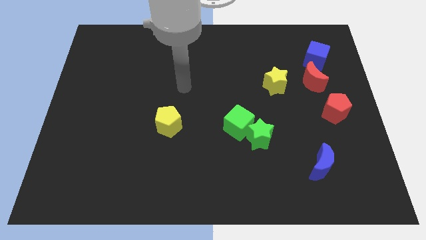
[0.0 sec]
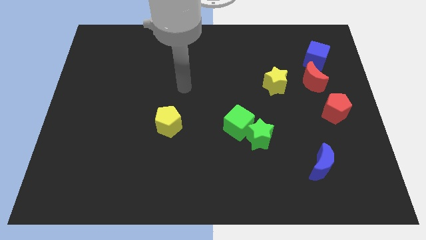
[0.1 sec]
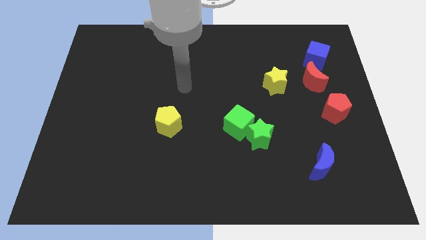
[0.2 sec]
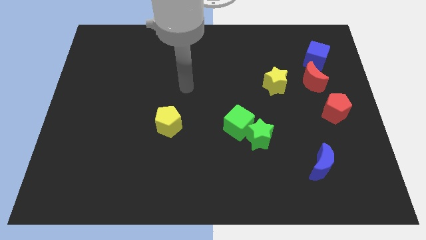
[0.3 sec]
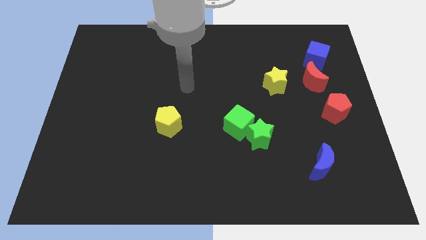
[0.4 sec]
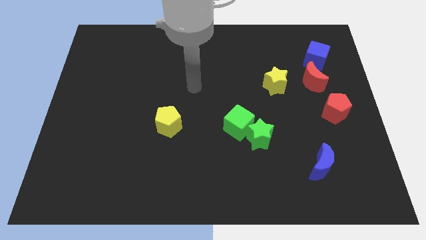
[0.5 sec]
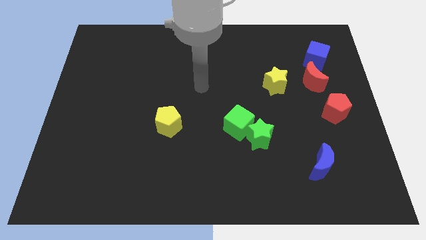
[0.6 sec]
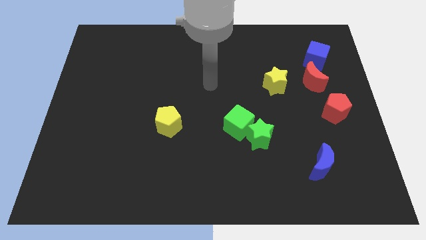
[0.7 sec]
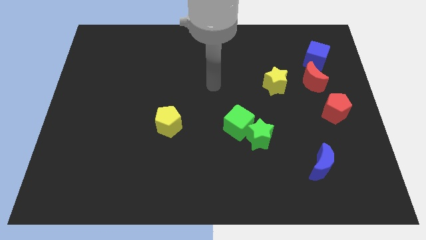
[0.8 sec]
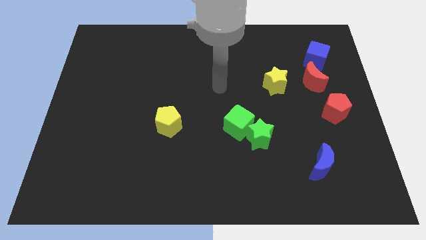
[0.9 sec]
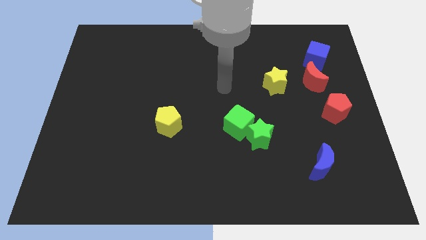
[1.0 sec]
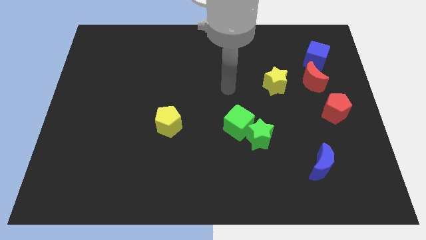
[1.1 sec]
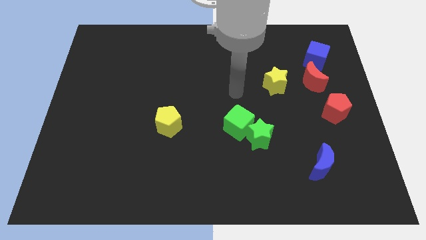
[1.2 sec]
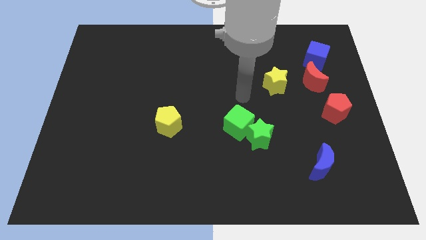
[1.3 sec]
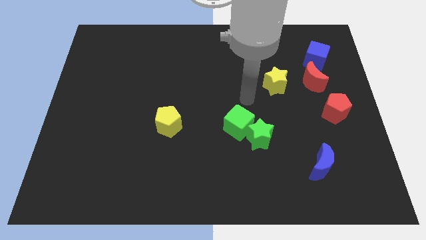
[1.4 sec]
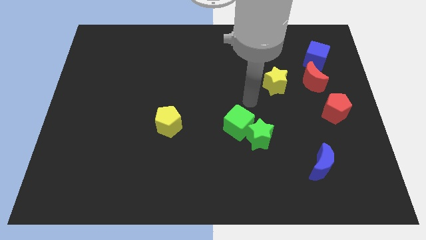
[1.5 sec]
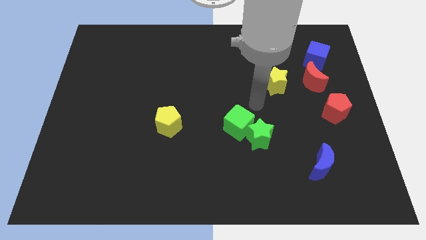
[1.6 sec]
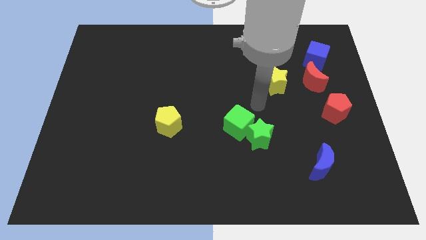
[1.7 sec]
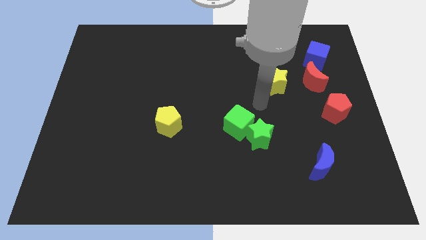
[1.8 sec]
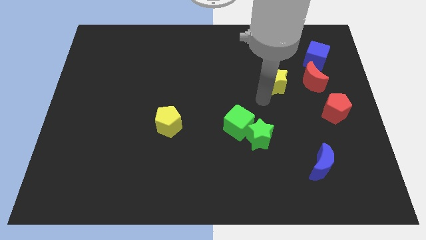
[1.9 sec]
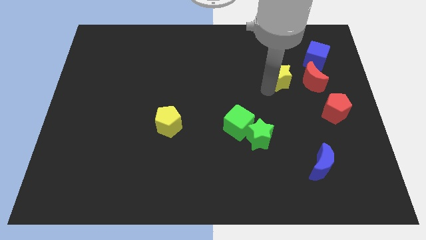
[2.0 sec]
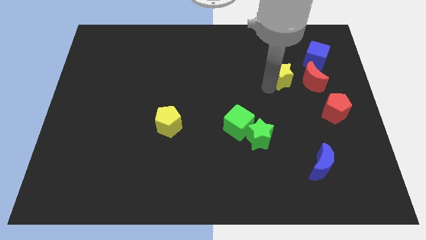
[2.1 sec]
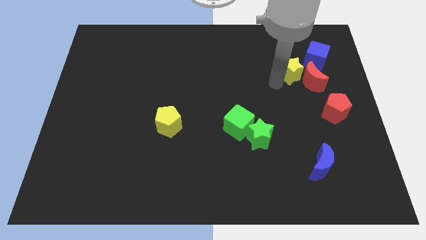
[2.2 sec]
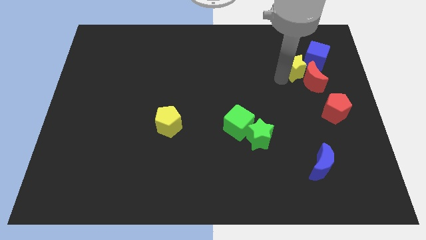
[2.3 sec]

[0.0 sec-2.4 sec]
drag the yellow star to the top left red moon

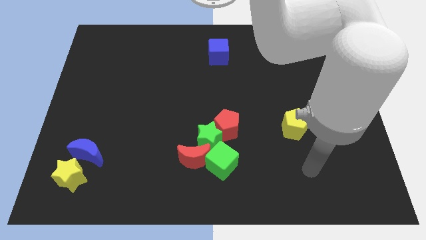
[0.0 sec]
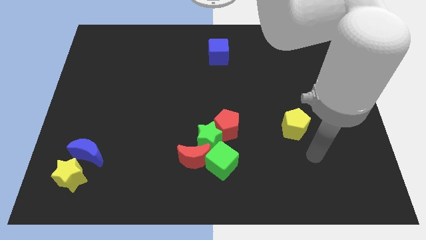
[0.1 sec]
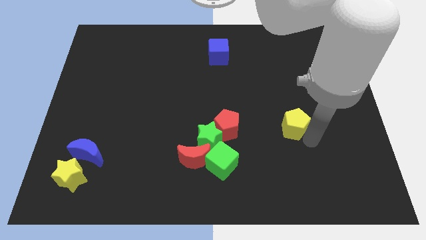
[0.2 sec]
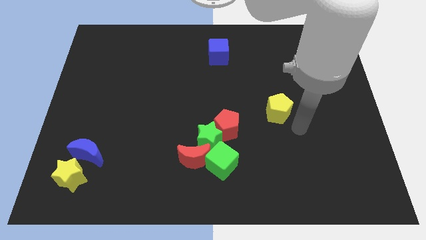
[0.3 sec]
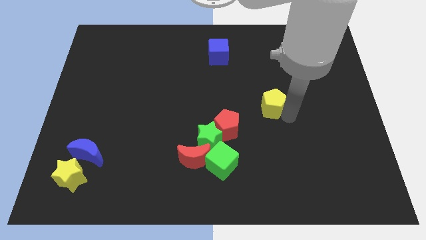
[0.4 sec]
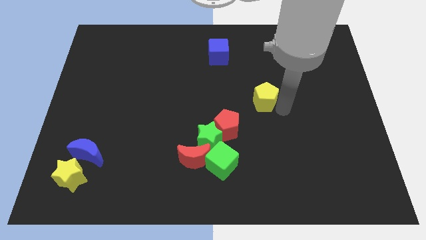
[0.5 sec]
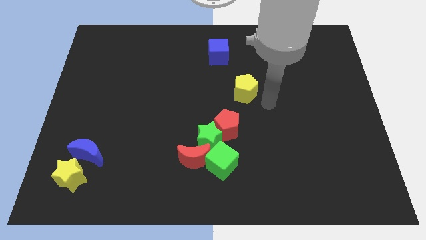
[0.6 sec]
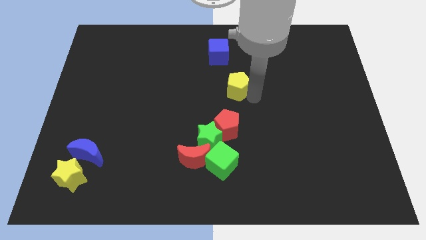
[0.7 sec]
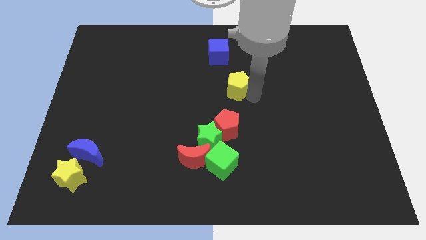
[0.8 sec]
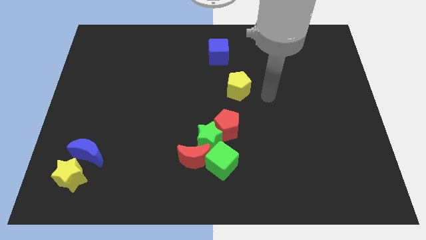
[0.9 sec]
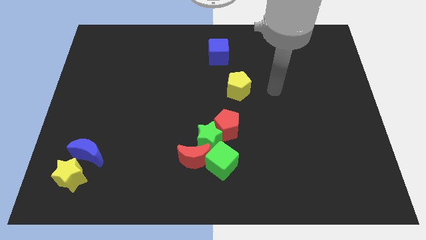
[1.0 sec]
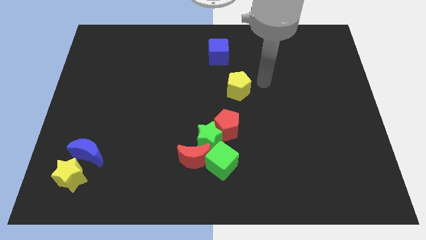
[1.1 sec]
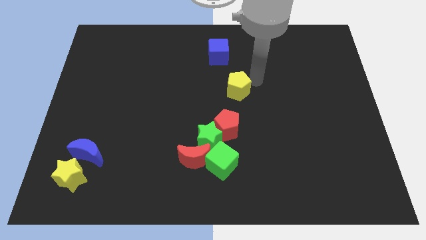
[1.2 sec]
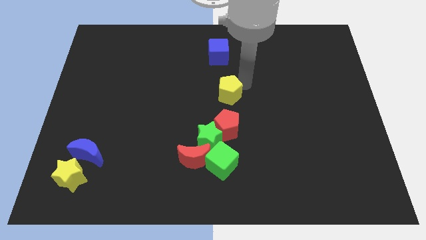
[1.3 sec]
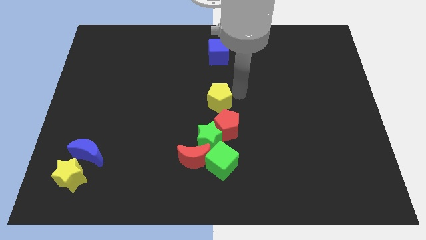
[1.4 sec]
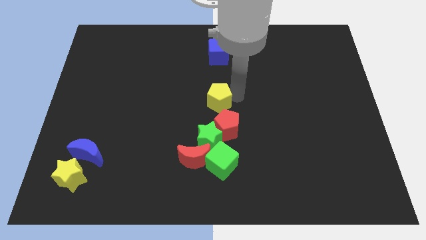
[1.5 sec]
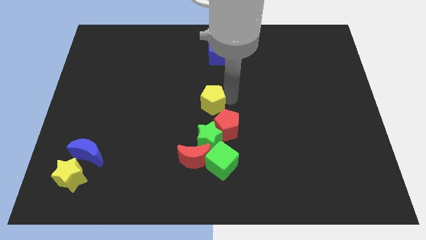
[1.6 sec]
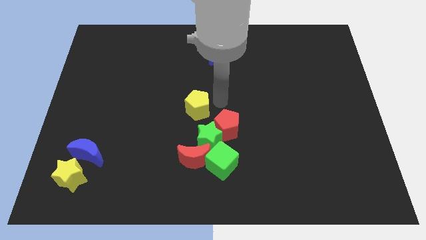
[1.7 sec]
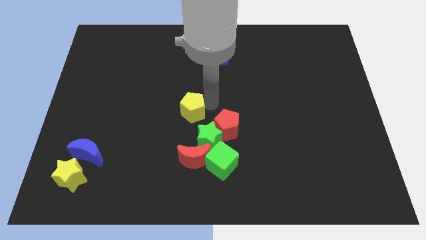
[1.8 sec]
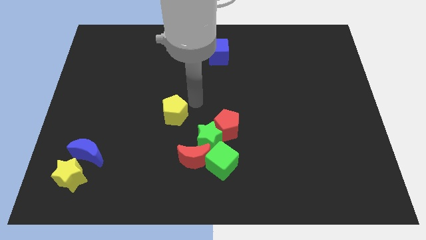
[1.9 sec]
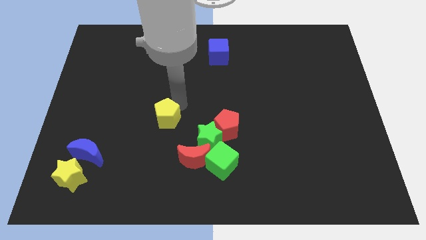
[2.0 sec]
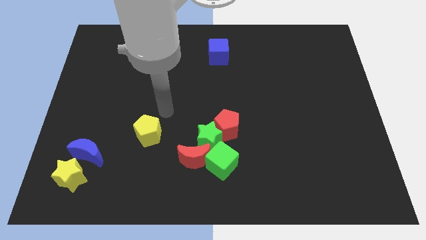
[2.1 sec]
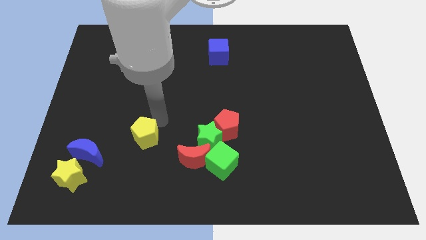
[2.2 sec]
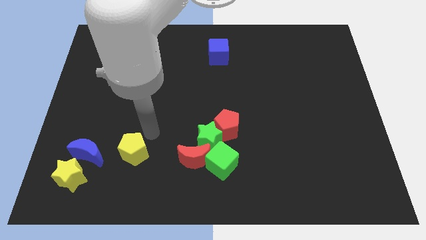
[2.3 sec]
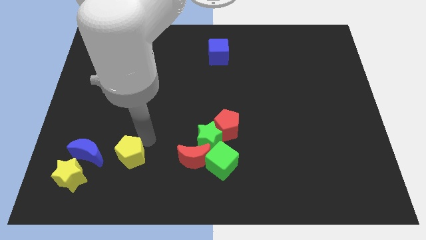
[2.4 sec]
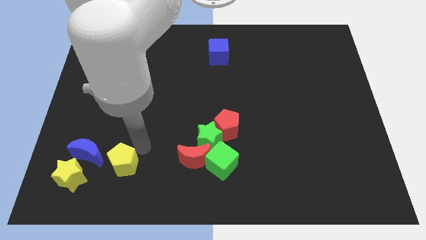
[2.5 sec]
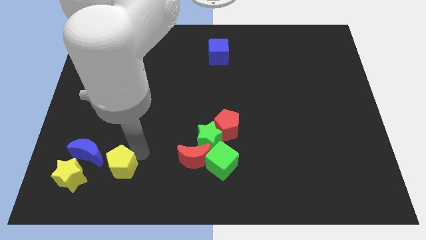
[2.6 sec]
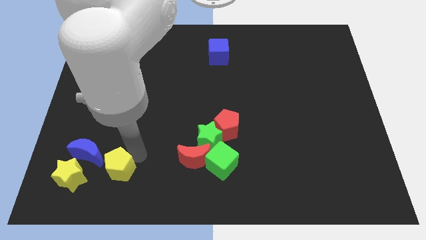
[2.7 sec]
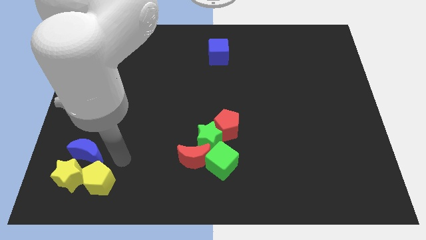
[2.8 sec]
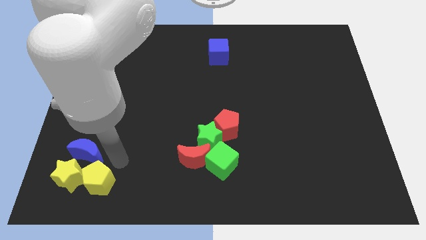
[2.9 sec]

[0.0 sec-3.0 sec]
move yellow pentagon right beside the yellow star

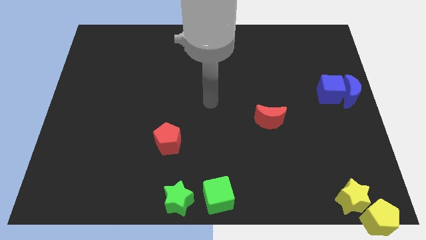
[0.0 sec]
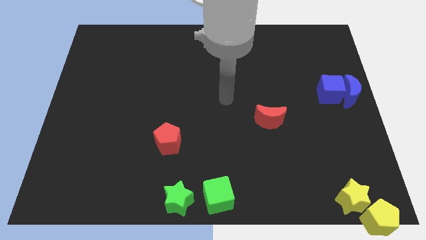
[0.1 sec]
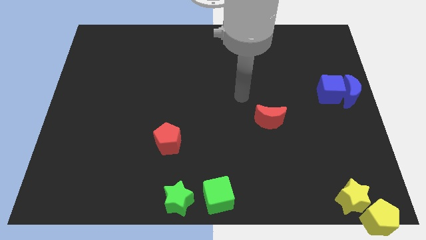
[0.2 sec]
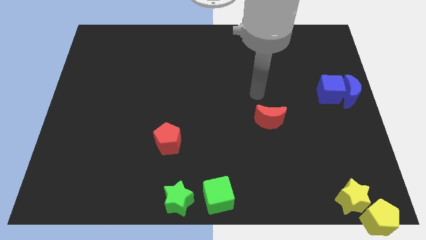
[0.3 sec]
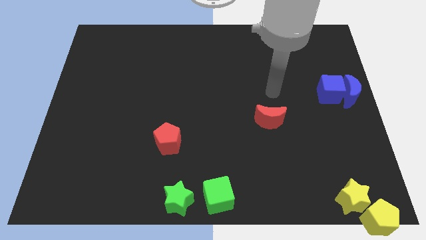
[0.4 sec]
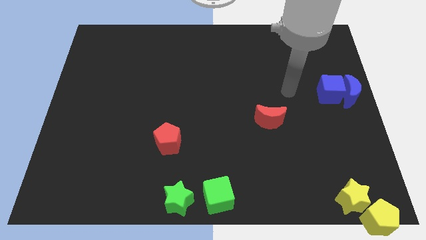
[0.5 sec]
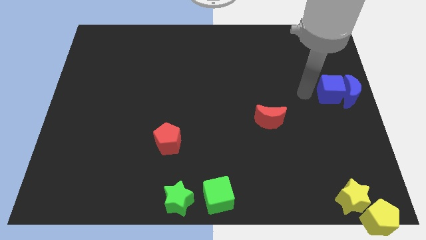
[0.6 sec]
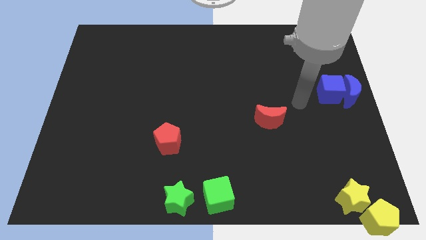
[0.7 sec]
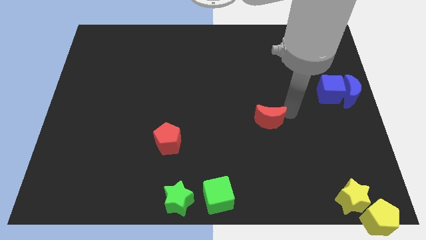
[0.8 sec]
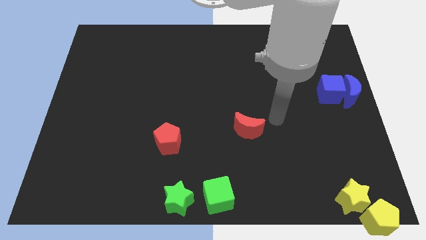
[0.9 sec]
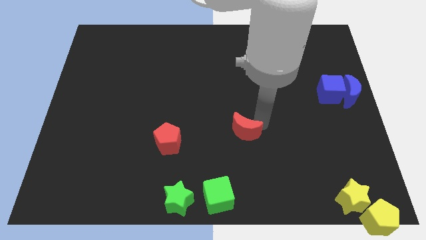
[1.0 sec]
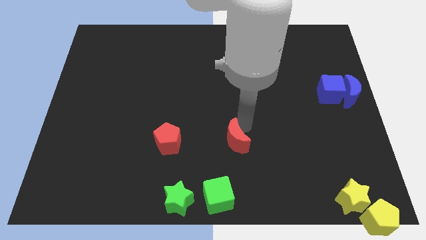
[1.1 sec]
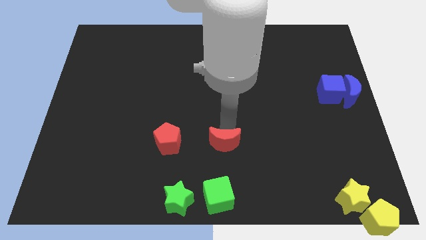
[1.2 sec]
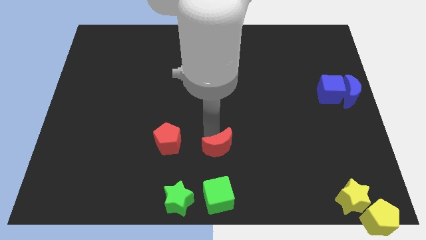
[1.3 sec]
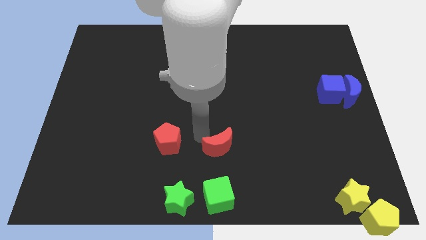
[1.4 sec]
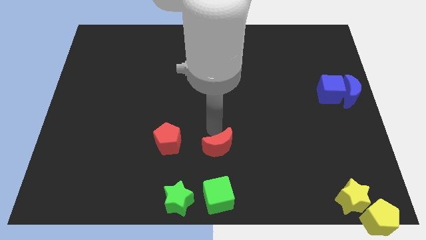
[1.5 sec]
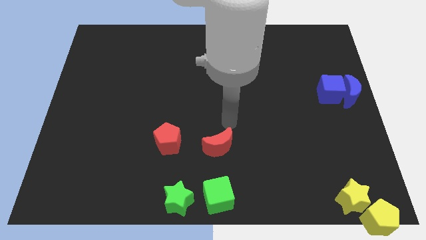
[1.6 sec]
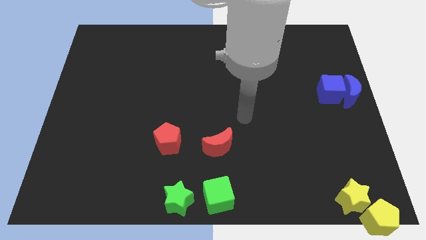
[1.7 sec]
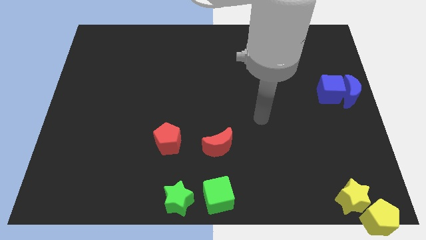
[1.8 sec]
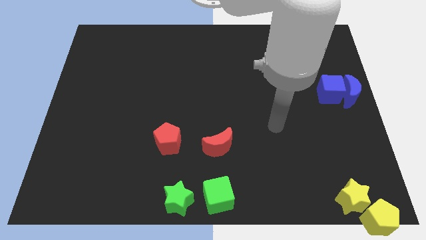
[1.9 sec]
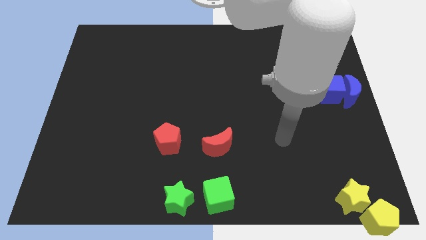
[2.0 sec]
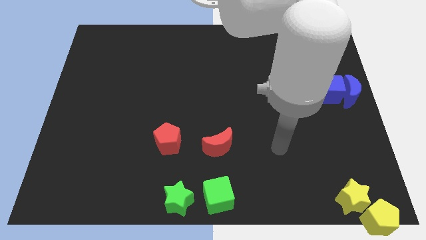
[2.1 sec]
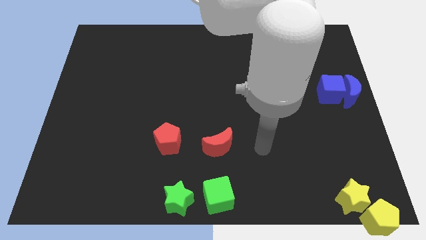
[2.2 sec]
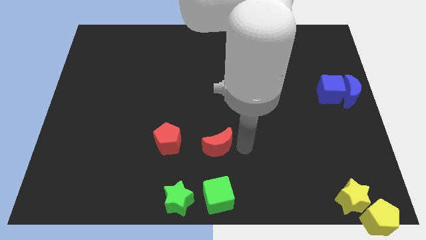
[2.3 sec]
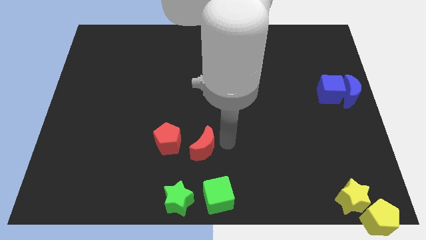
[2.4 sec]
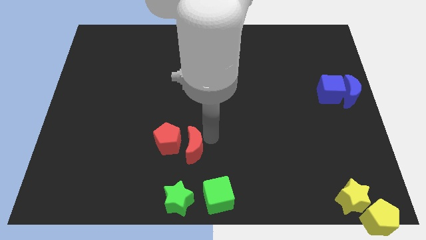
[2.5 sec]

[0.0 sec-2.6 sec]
place the red moon on the right of red pentagon

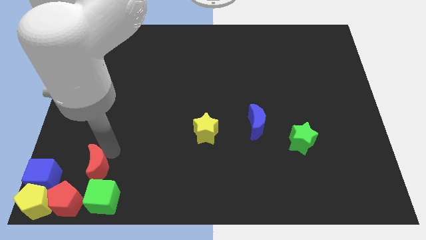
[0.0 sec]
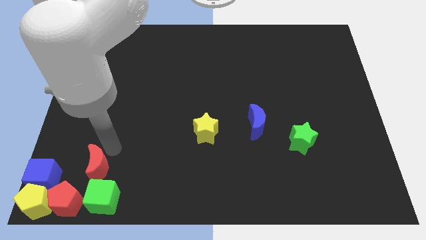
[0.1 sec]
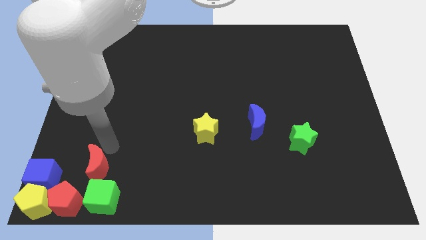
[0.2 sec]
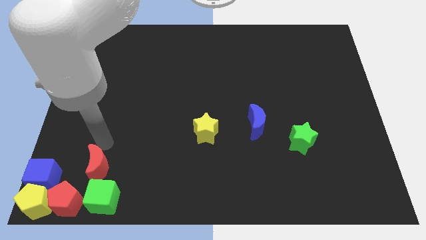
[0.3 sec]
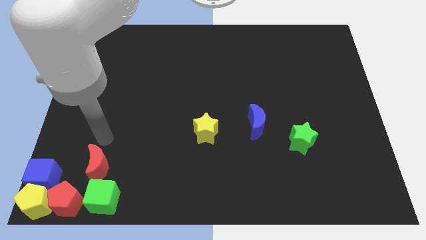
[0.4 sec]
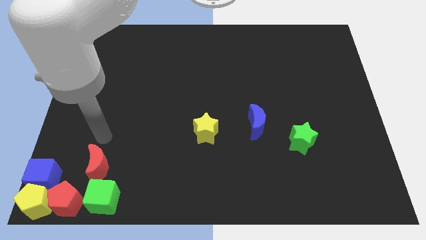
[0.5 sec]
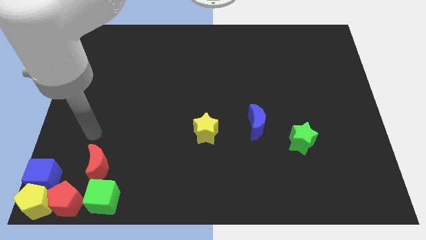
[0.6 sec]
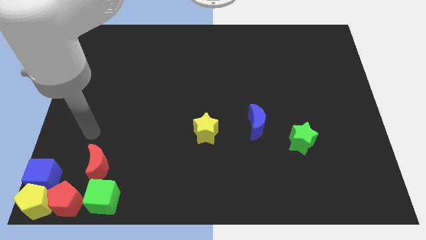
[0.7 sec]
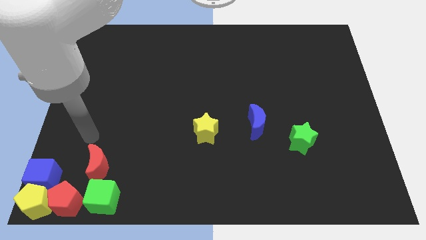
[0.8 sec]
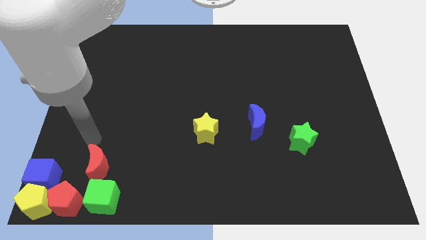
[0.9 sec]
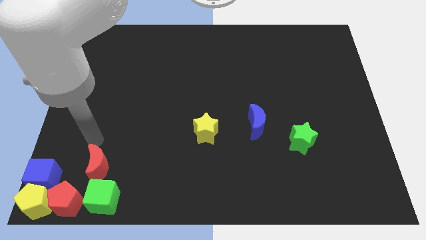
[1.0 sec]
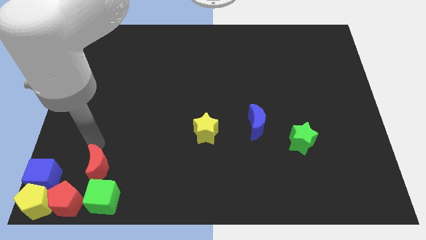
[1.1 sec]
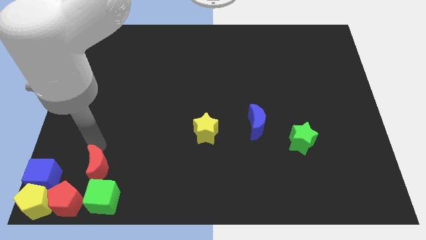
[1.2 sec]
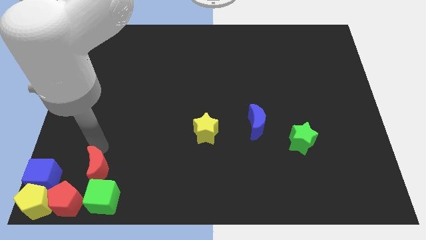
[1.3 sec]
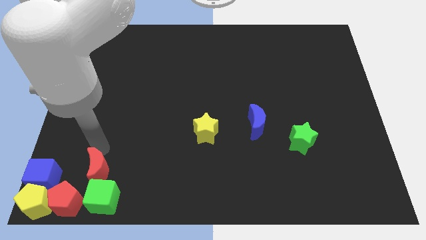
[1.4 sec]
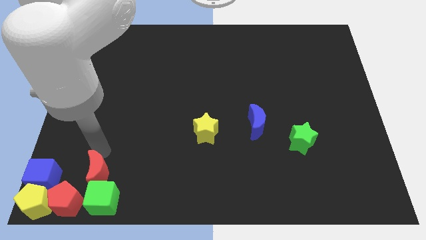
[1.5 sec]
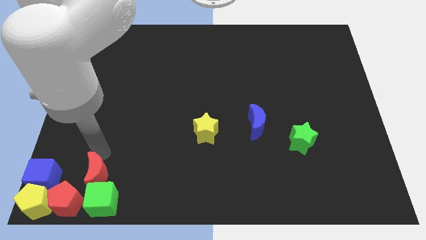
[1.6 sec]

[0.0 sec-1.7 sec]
move the red moon to the center bottom
